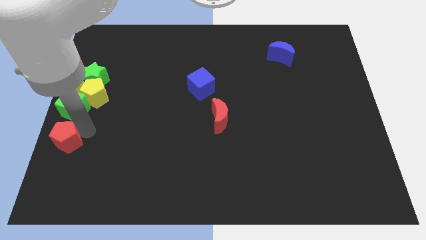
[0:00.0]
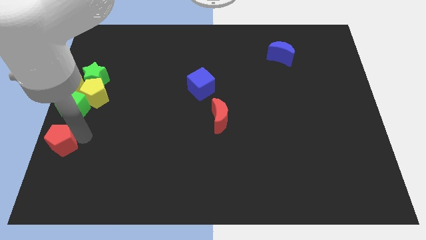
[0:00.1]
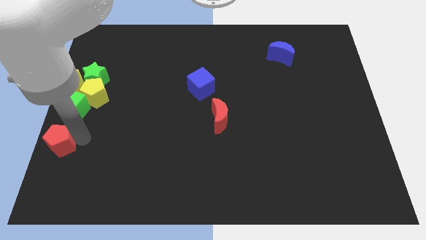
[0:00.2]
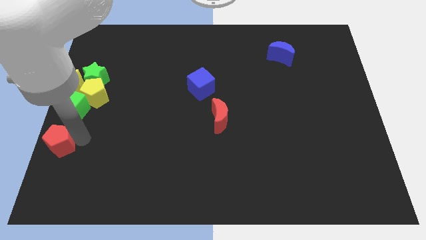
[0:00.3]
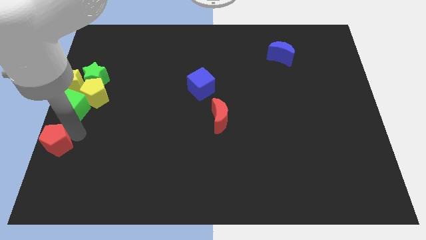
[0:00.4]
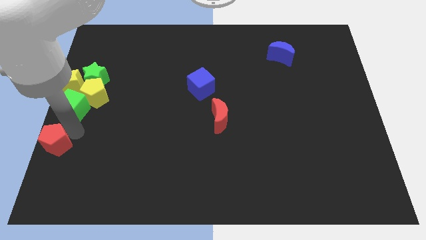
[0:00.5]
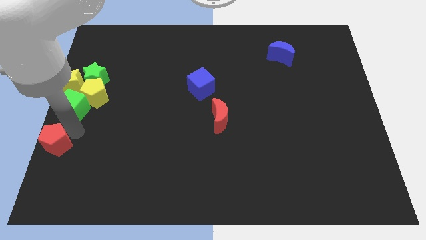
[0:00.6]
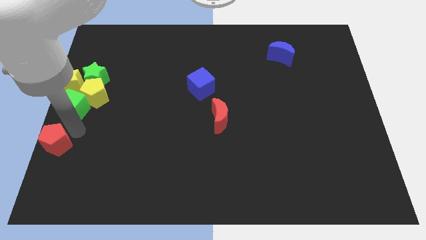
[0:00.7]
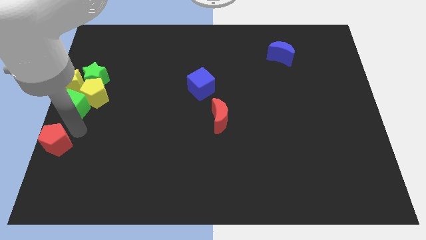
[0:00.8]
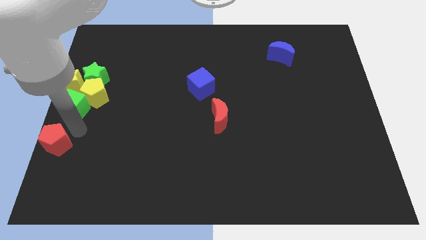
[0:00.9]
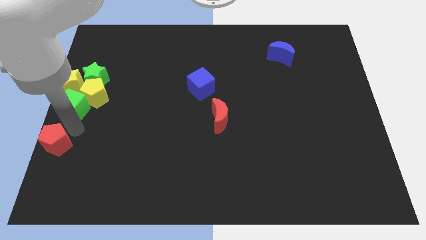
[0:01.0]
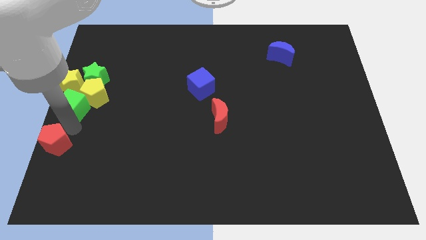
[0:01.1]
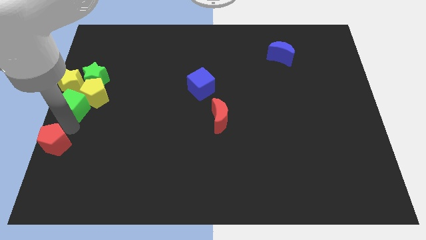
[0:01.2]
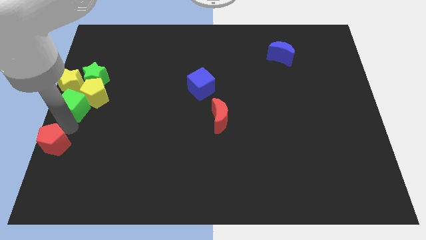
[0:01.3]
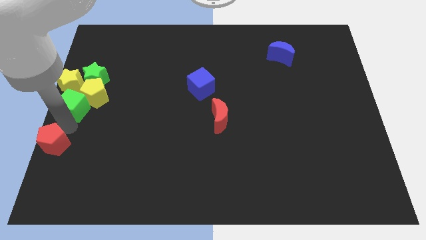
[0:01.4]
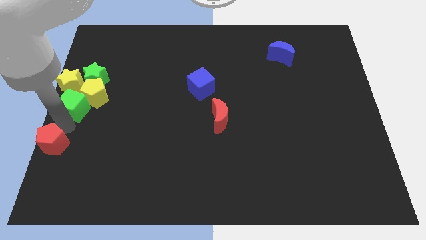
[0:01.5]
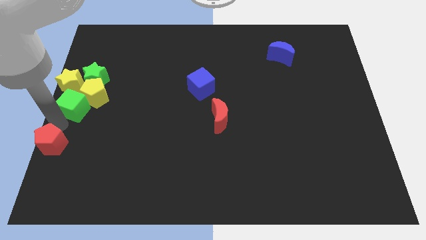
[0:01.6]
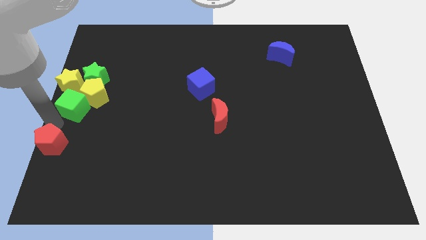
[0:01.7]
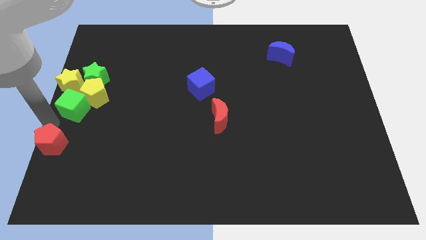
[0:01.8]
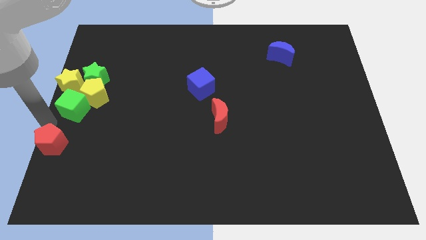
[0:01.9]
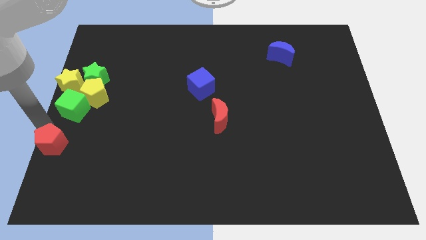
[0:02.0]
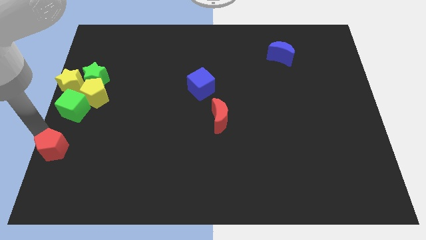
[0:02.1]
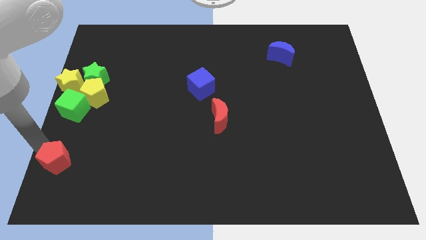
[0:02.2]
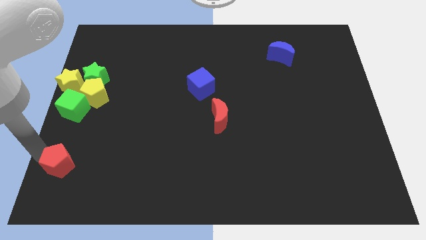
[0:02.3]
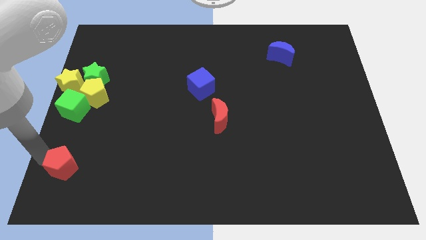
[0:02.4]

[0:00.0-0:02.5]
move red pentagon slightly downwards

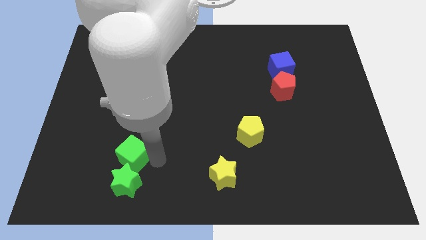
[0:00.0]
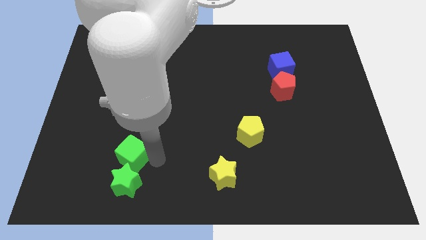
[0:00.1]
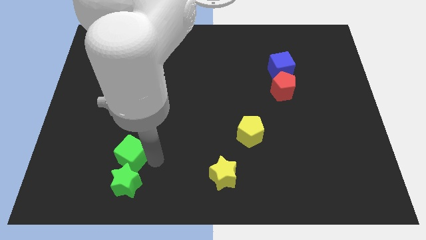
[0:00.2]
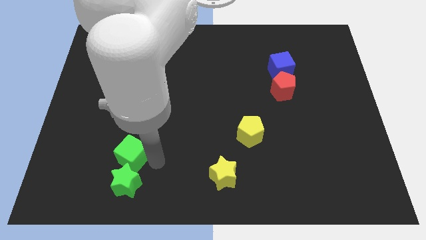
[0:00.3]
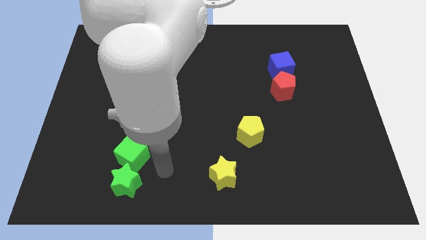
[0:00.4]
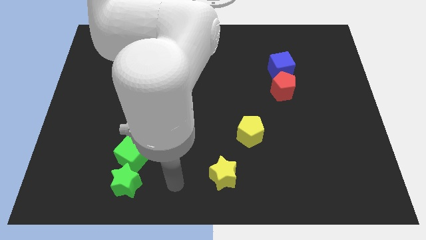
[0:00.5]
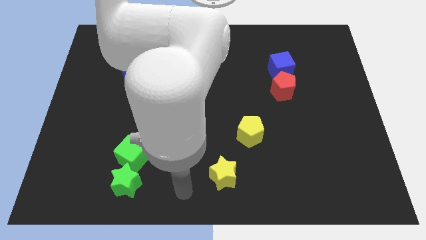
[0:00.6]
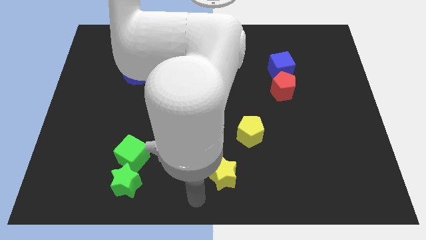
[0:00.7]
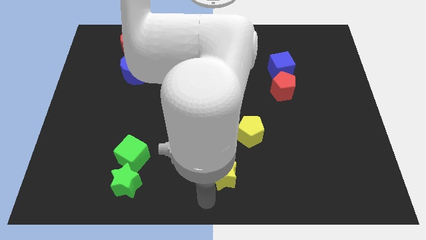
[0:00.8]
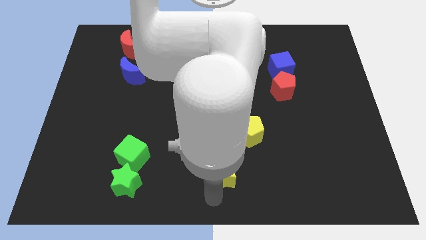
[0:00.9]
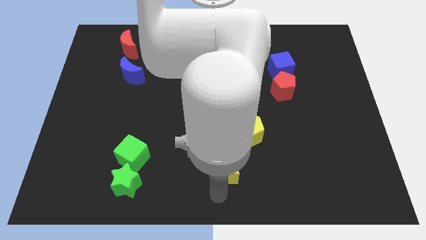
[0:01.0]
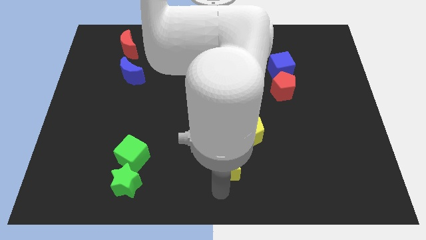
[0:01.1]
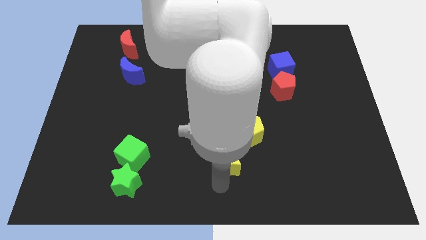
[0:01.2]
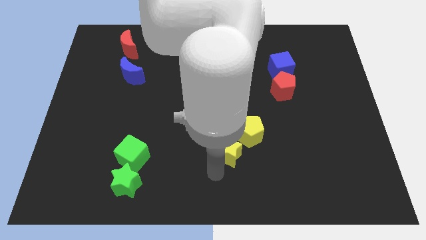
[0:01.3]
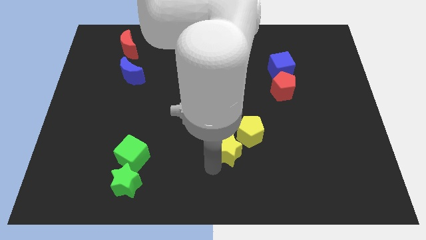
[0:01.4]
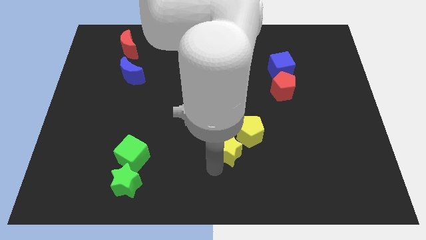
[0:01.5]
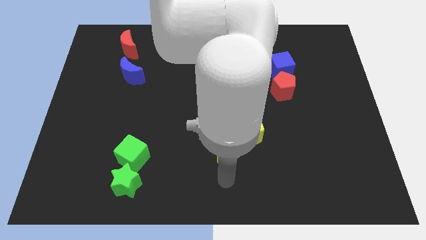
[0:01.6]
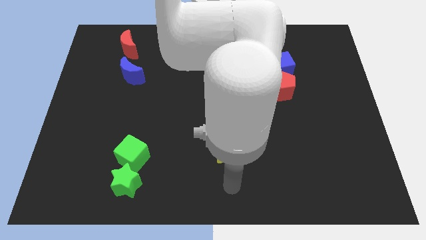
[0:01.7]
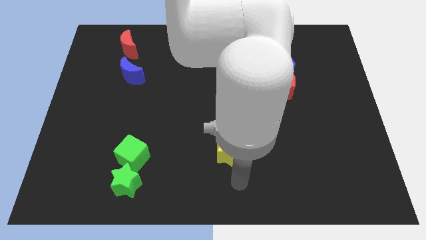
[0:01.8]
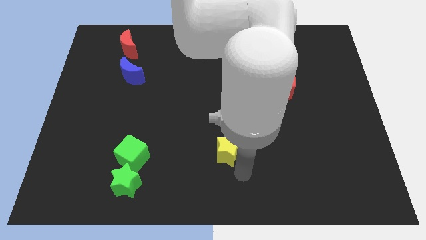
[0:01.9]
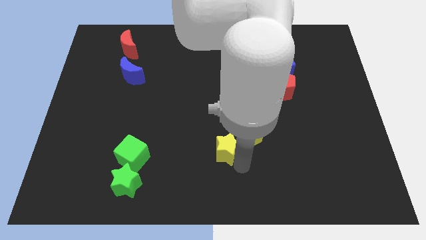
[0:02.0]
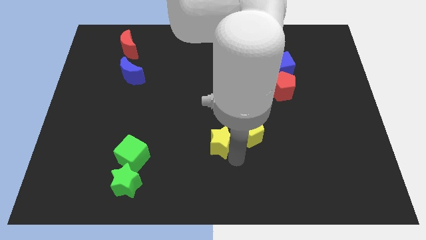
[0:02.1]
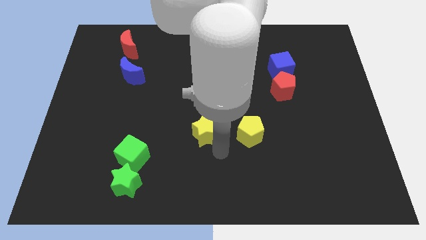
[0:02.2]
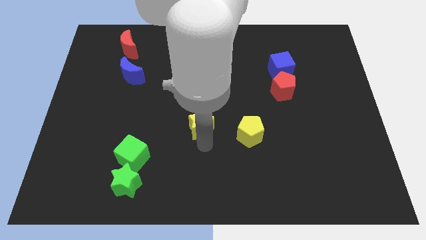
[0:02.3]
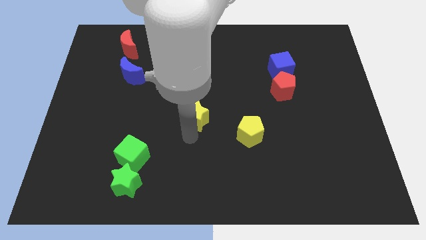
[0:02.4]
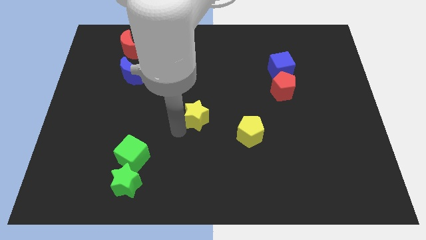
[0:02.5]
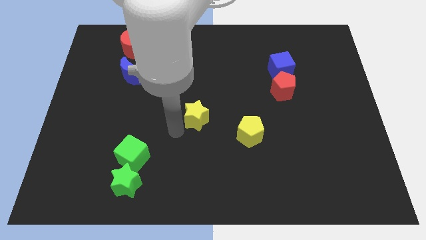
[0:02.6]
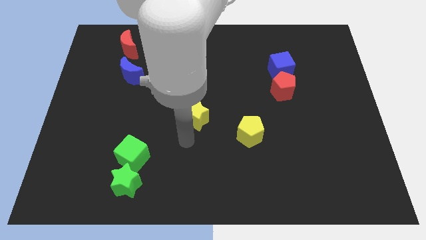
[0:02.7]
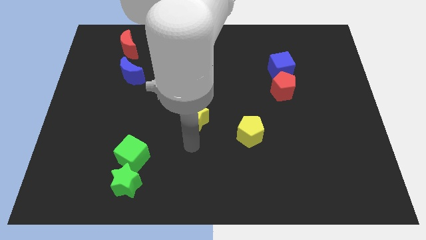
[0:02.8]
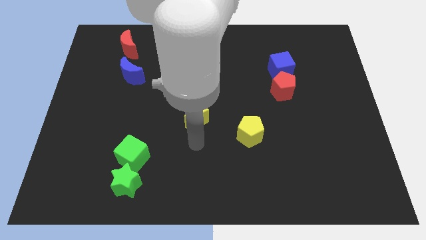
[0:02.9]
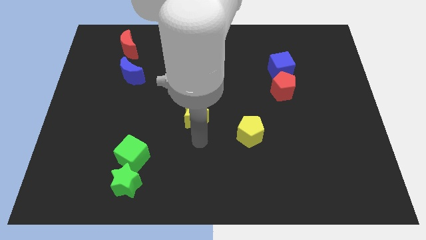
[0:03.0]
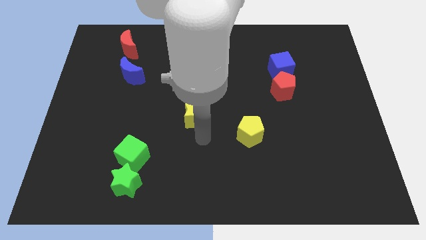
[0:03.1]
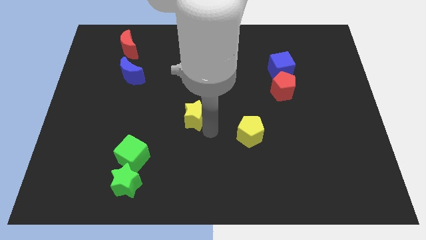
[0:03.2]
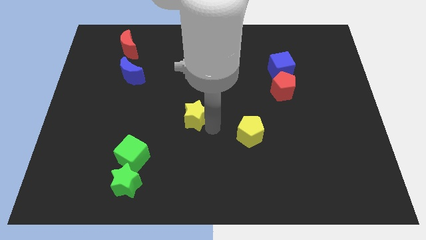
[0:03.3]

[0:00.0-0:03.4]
place the yellow star to the center

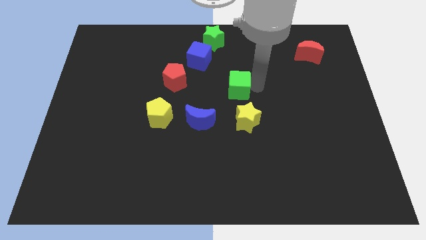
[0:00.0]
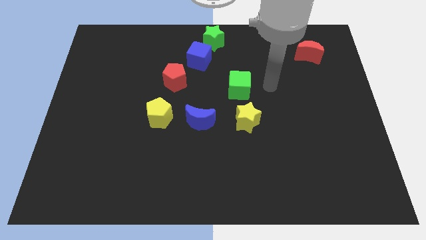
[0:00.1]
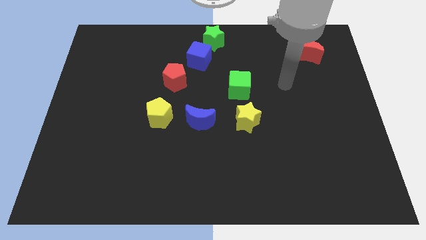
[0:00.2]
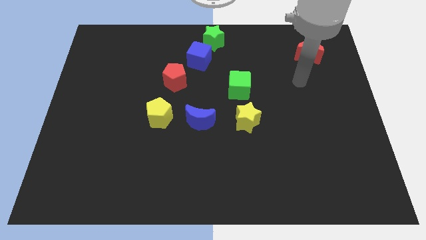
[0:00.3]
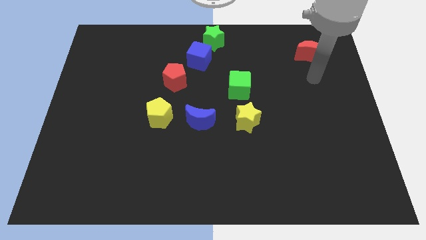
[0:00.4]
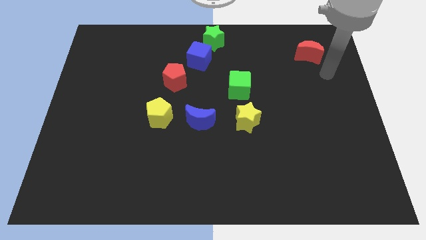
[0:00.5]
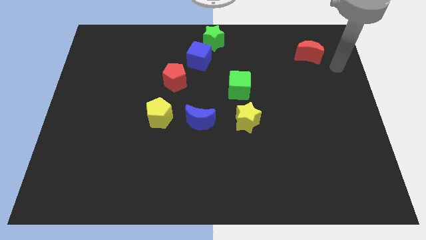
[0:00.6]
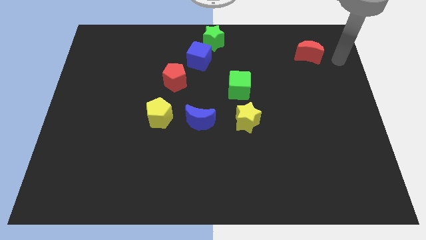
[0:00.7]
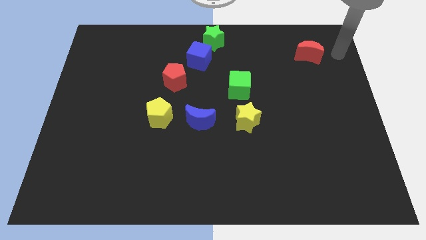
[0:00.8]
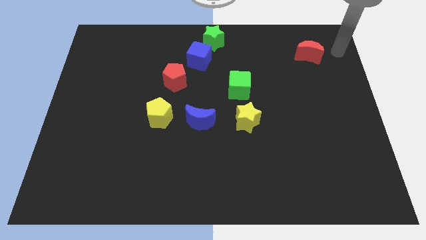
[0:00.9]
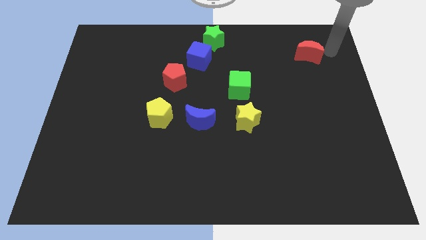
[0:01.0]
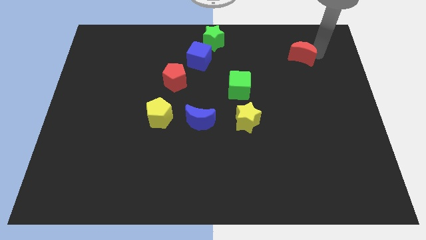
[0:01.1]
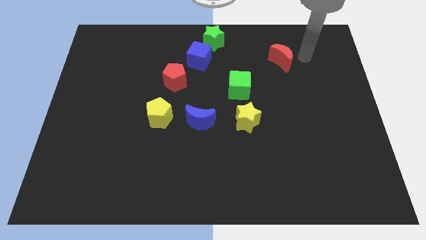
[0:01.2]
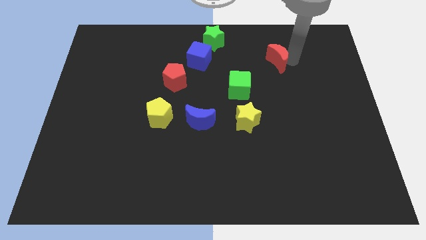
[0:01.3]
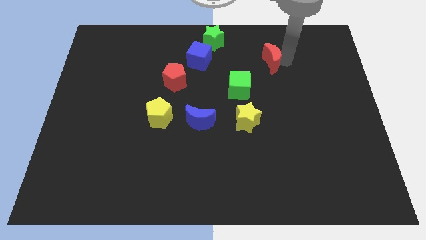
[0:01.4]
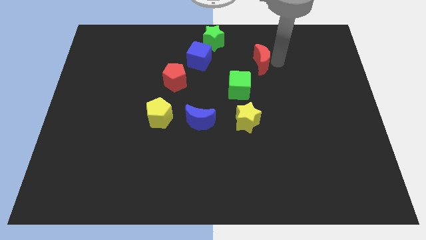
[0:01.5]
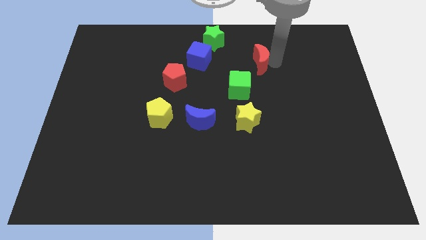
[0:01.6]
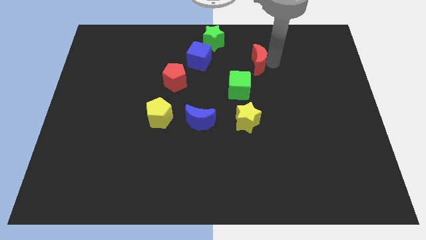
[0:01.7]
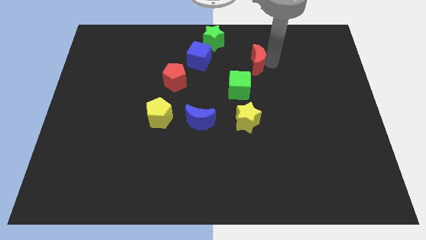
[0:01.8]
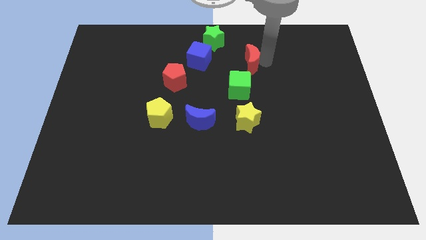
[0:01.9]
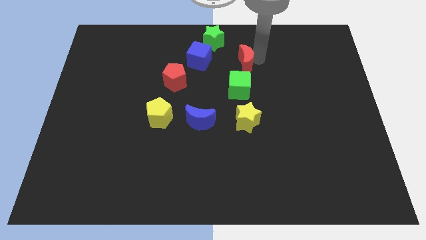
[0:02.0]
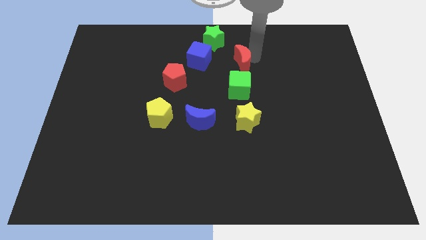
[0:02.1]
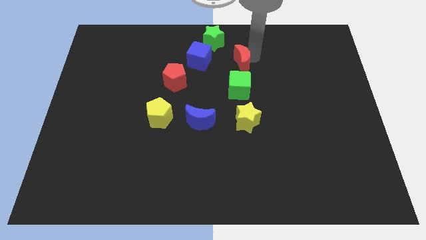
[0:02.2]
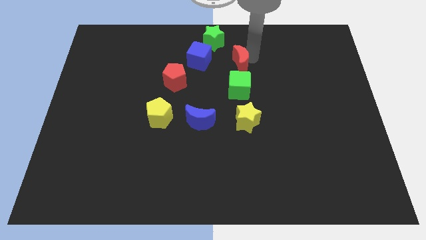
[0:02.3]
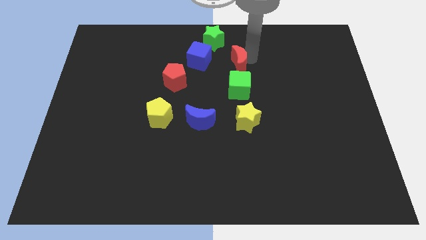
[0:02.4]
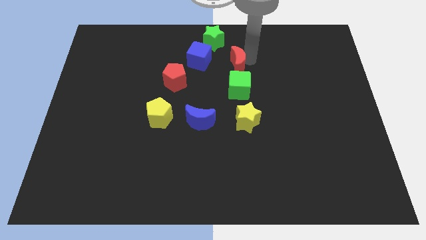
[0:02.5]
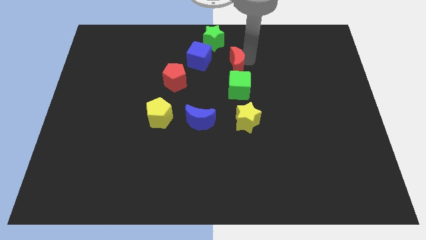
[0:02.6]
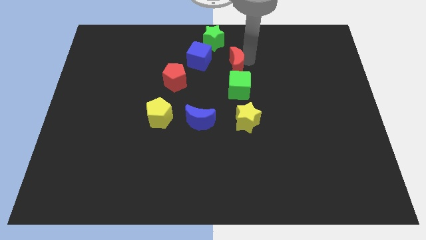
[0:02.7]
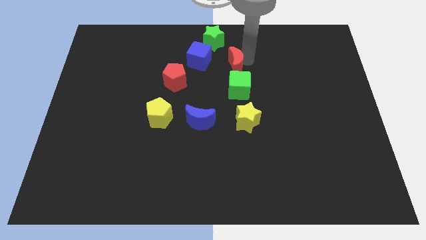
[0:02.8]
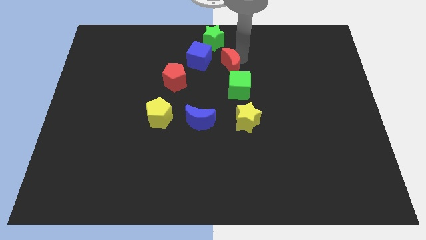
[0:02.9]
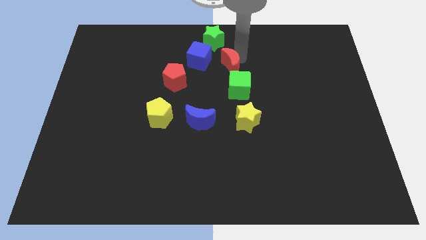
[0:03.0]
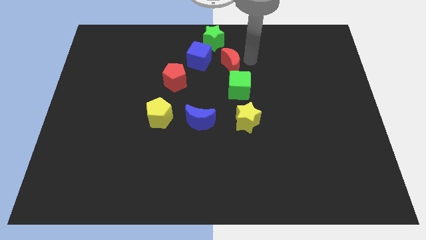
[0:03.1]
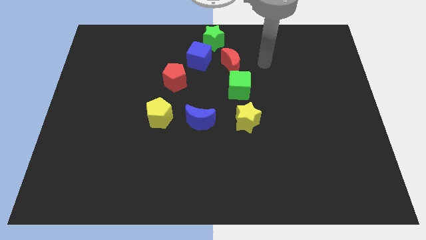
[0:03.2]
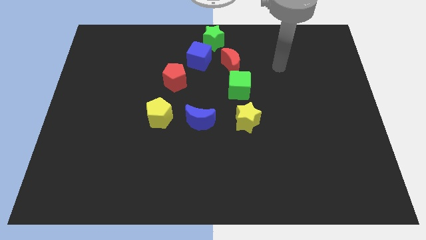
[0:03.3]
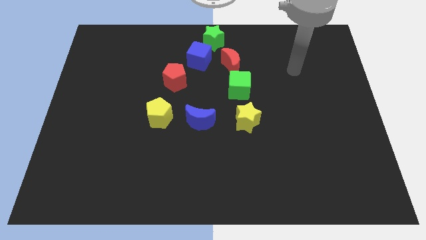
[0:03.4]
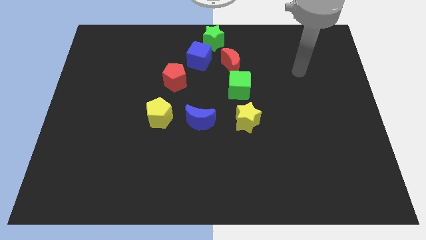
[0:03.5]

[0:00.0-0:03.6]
place the red crescent diagonally in between both the green blocks
